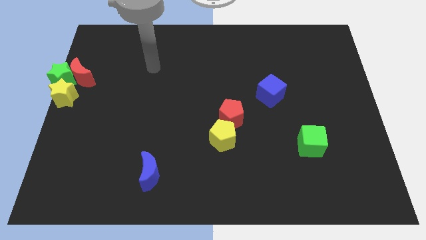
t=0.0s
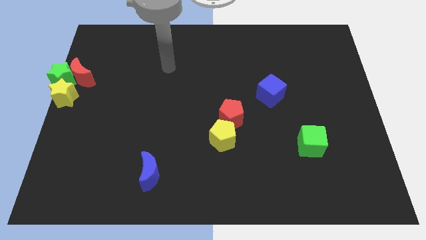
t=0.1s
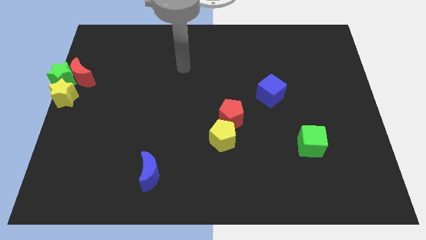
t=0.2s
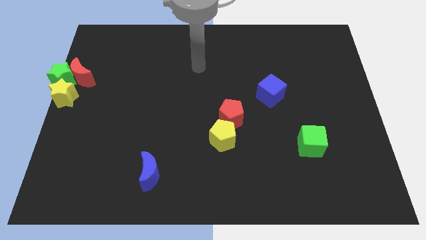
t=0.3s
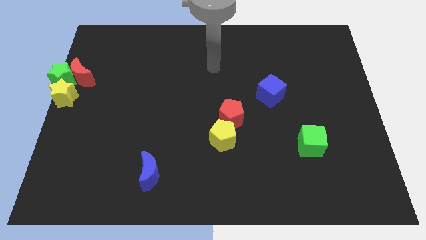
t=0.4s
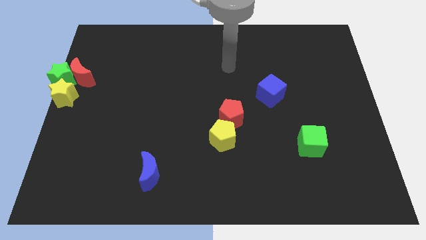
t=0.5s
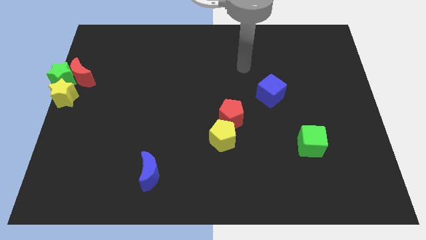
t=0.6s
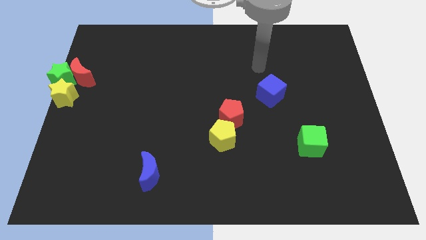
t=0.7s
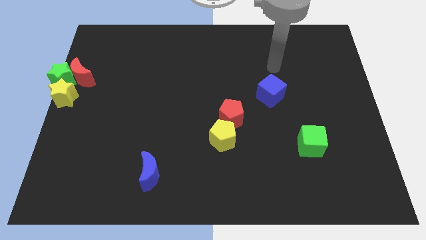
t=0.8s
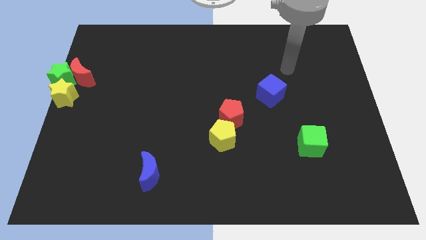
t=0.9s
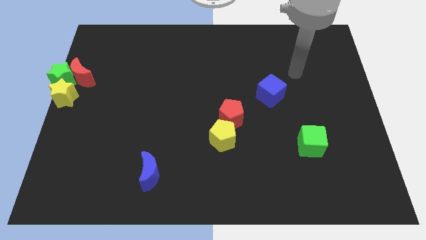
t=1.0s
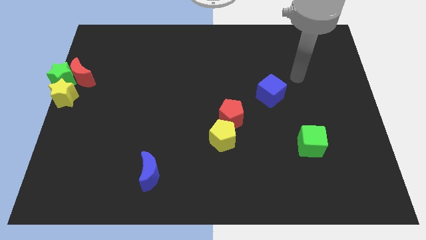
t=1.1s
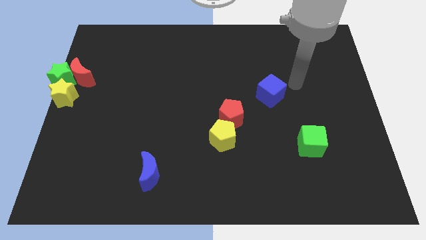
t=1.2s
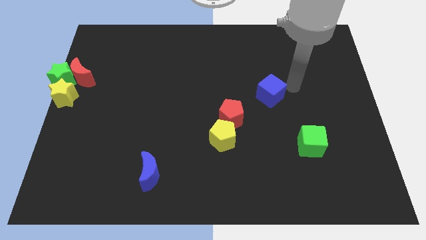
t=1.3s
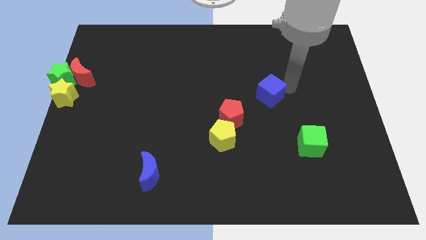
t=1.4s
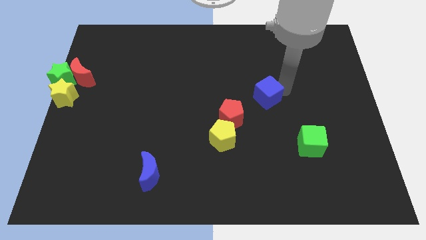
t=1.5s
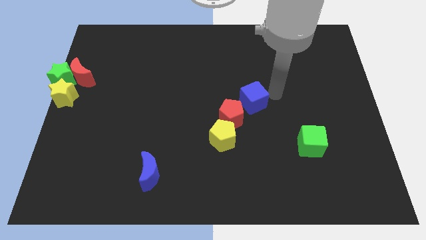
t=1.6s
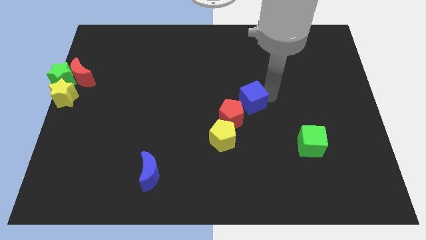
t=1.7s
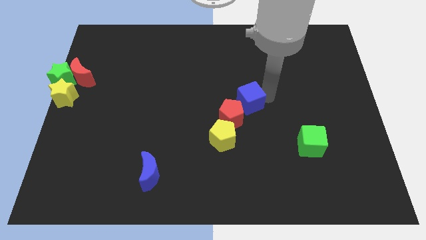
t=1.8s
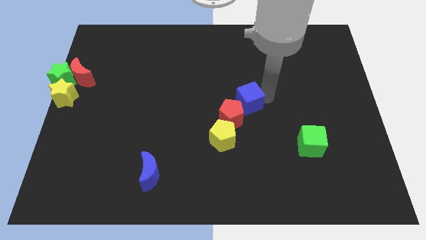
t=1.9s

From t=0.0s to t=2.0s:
move the blue cube into the red pentagon

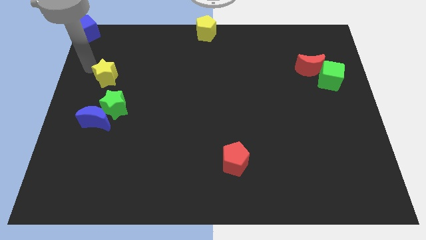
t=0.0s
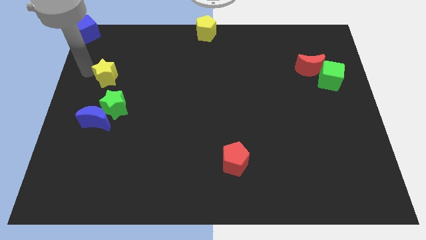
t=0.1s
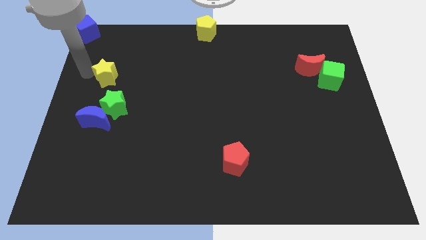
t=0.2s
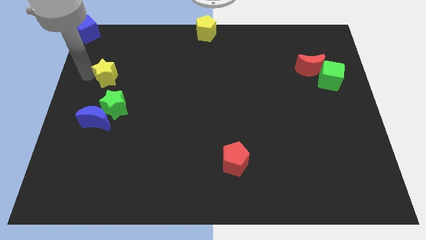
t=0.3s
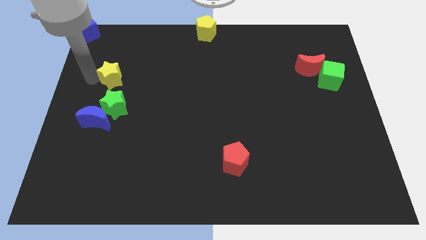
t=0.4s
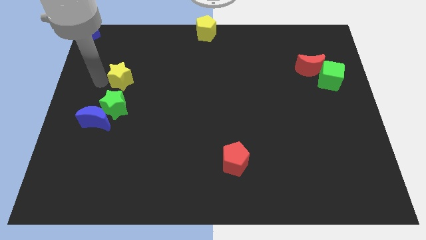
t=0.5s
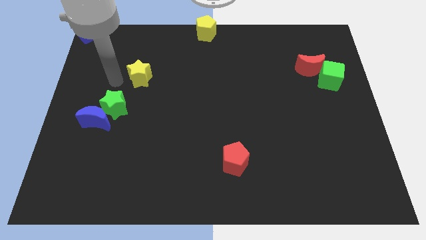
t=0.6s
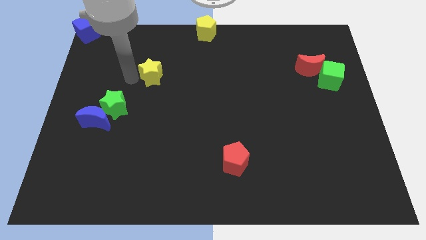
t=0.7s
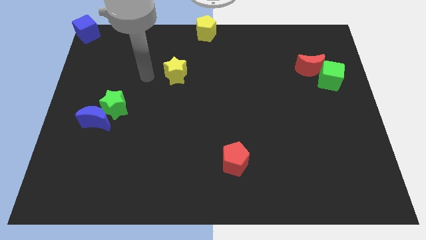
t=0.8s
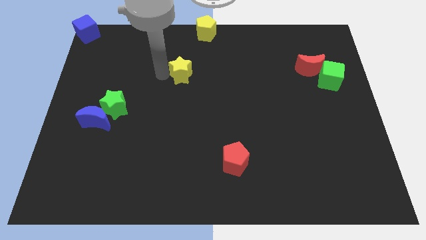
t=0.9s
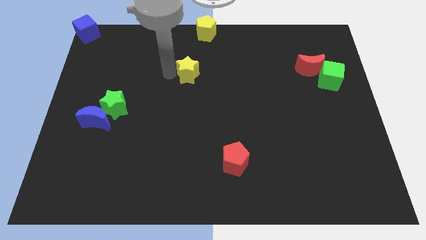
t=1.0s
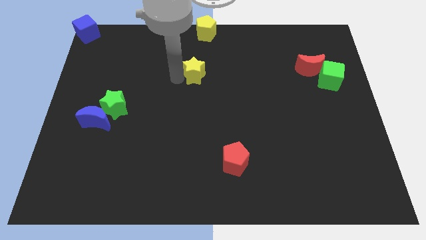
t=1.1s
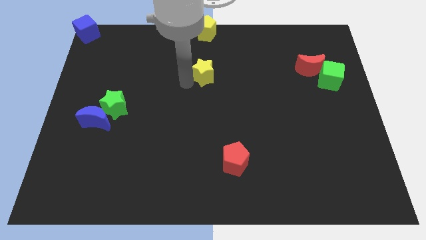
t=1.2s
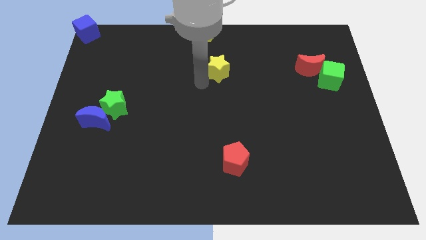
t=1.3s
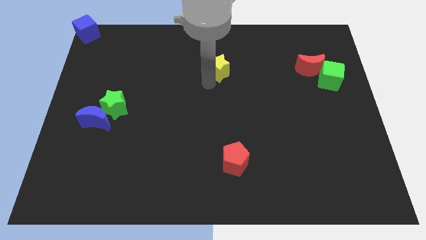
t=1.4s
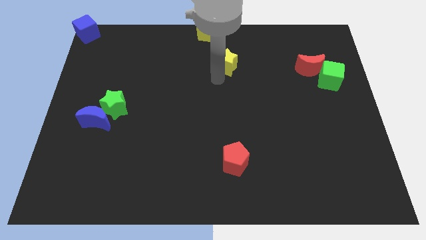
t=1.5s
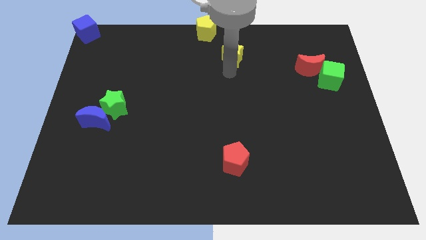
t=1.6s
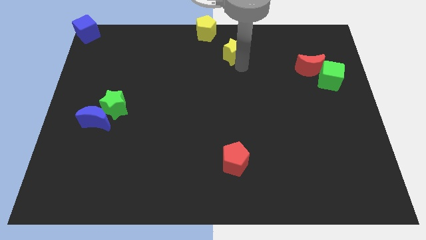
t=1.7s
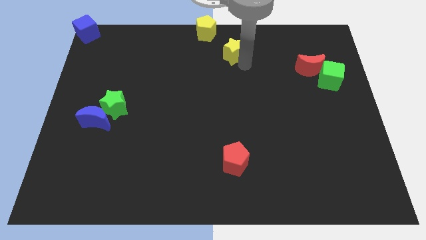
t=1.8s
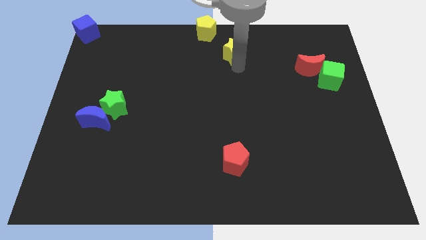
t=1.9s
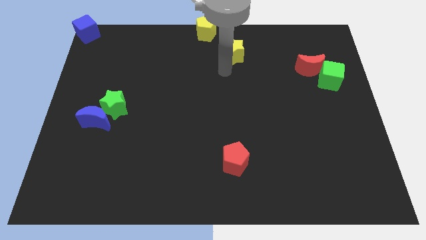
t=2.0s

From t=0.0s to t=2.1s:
push the yellow star diagonal to the green star

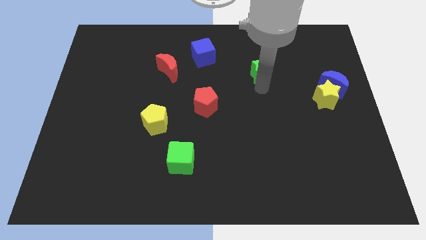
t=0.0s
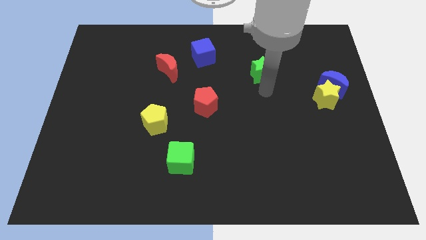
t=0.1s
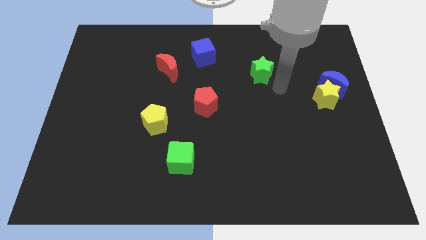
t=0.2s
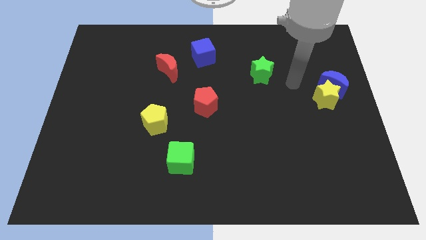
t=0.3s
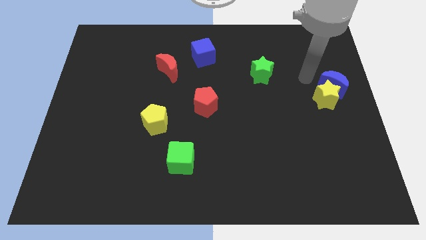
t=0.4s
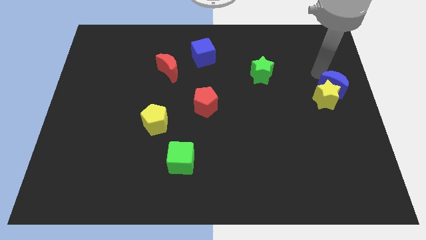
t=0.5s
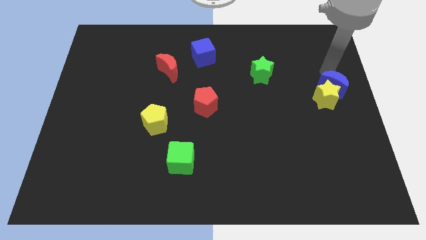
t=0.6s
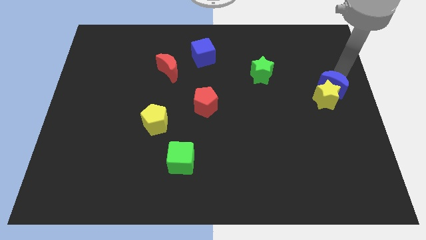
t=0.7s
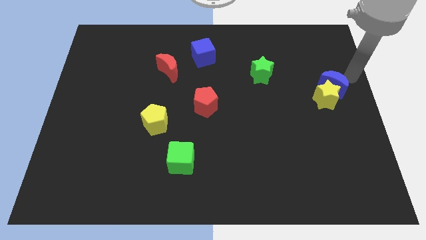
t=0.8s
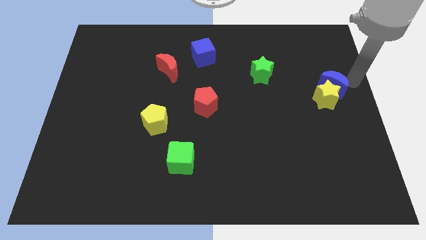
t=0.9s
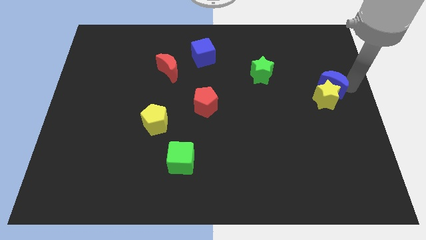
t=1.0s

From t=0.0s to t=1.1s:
move your arm towards the blue crescent

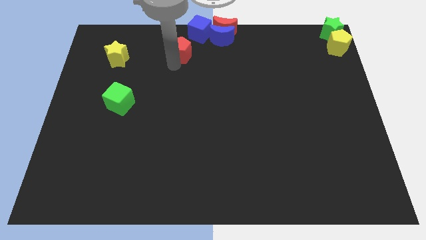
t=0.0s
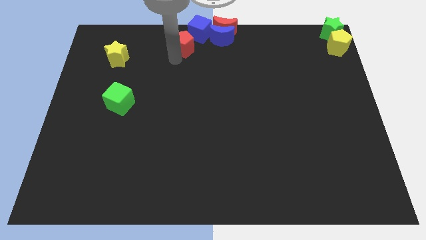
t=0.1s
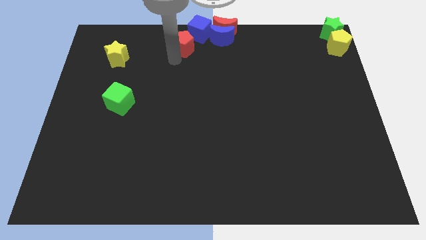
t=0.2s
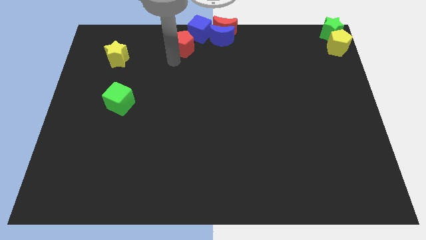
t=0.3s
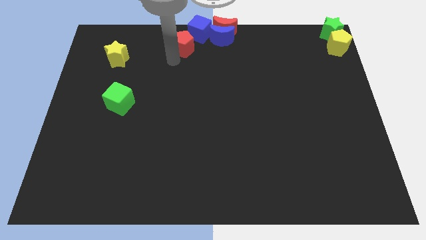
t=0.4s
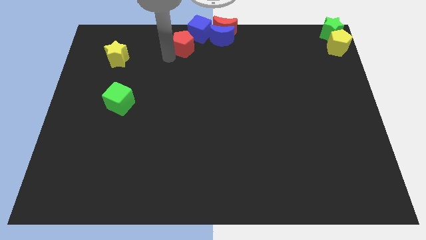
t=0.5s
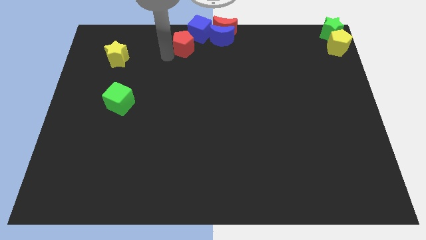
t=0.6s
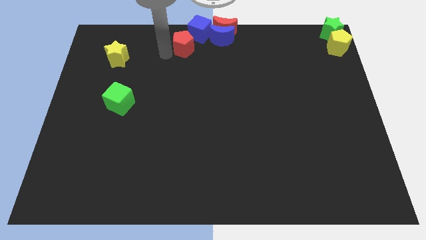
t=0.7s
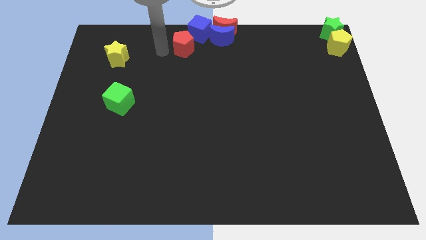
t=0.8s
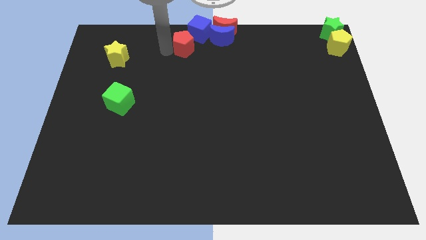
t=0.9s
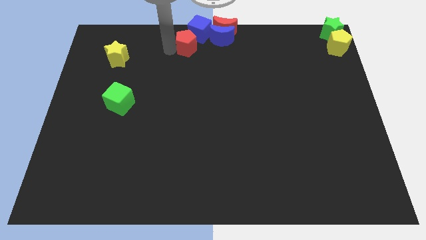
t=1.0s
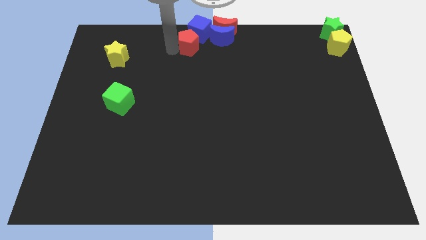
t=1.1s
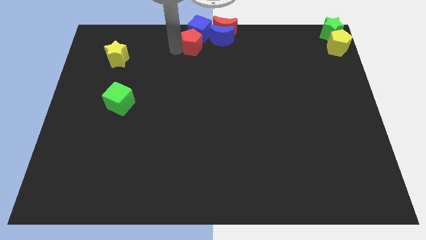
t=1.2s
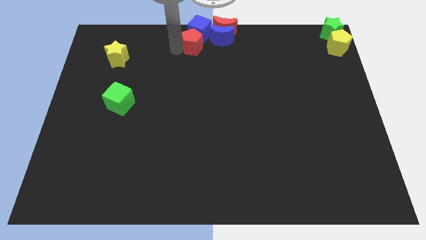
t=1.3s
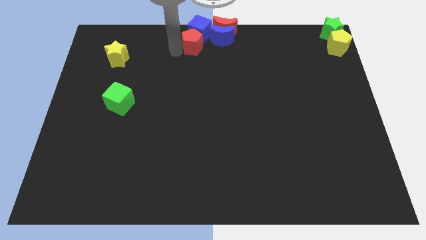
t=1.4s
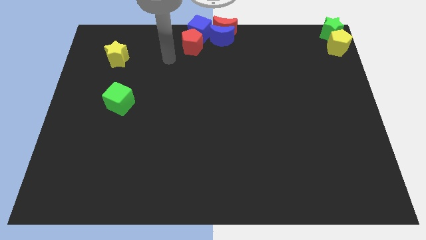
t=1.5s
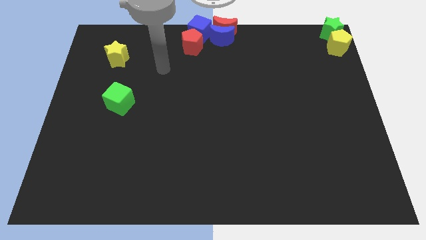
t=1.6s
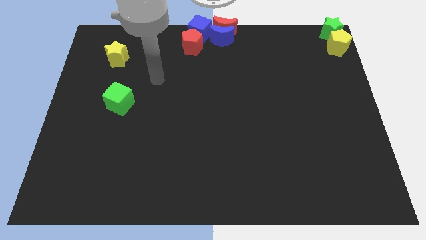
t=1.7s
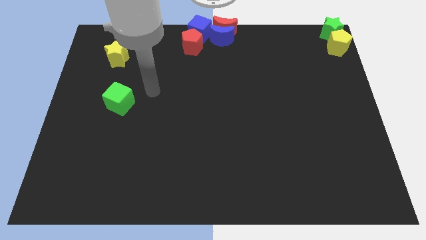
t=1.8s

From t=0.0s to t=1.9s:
push the red pentagon towards the blue cube

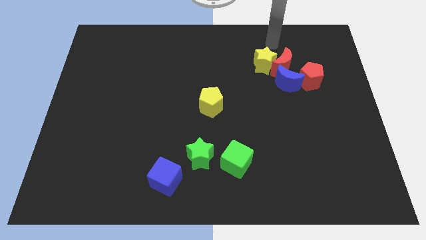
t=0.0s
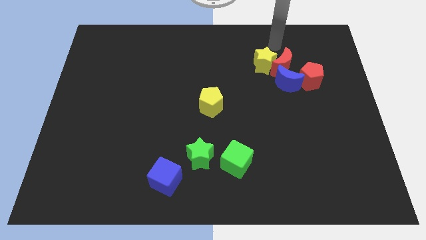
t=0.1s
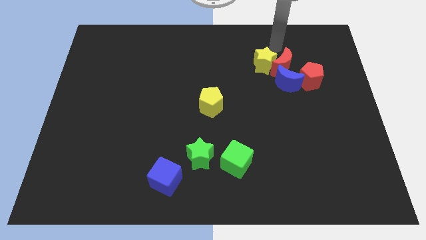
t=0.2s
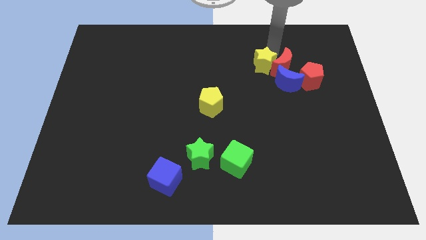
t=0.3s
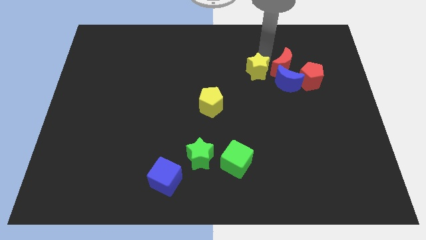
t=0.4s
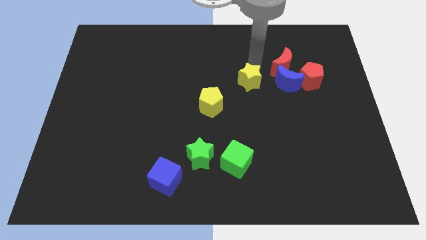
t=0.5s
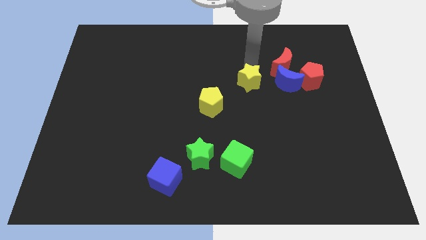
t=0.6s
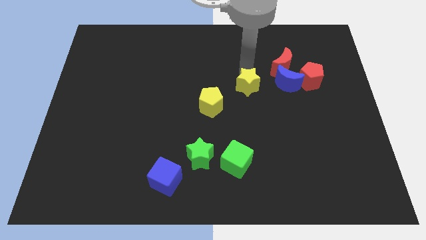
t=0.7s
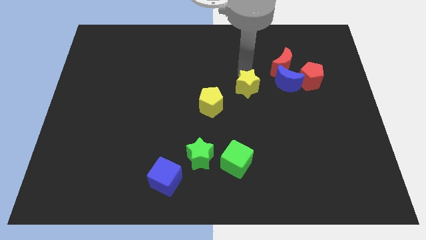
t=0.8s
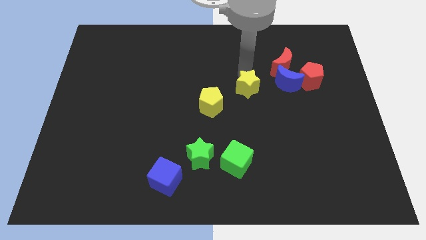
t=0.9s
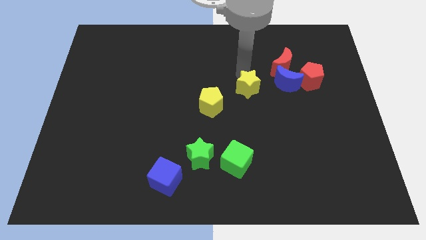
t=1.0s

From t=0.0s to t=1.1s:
place the yellow star in between red moon and yellow pentagon

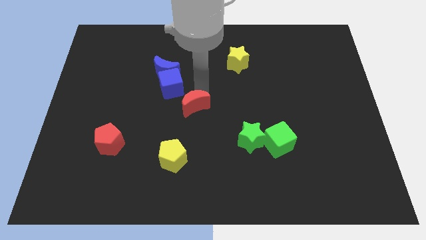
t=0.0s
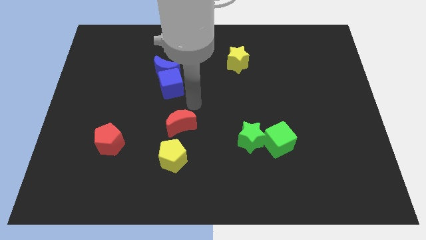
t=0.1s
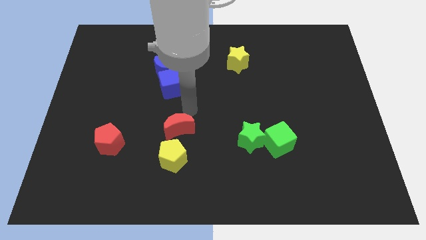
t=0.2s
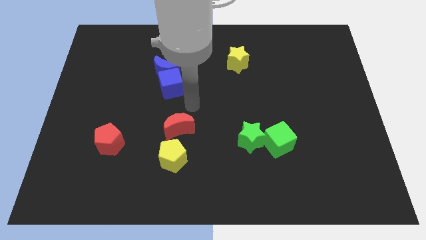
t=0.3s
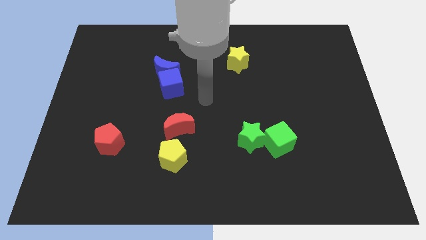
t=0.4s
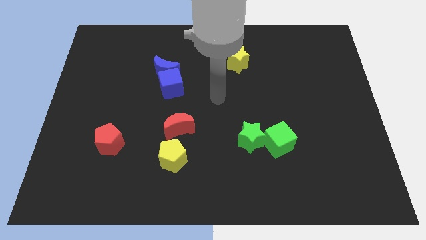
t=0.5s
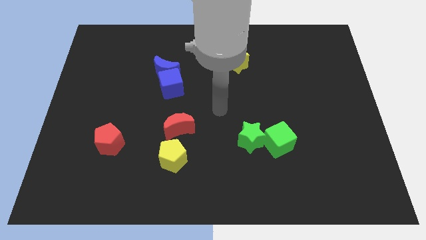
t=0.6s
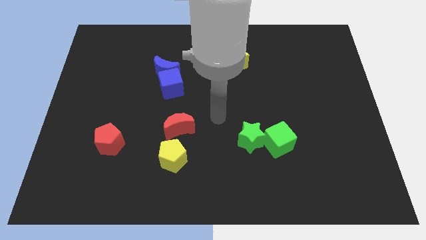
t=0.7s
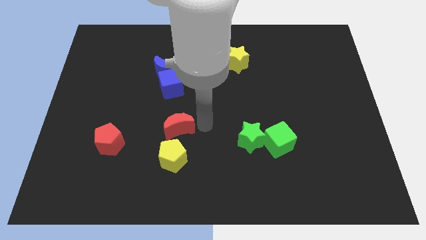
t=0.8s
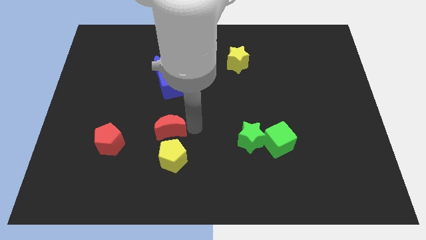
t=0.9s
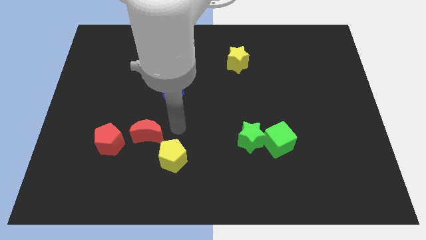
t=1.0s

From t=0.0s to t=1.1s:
push the red crescent close to the yellow pentagon
